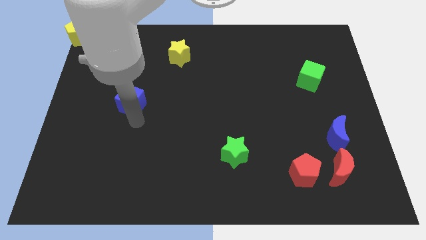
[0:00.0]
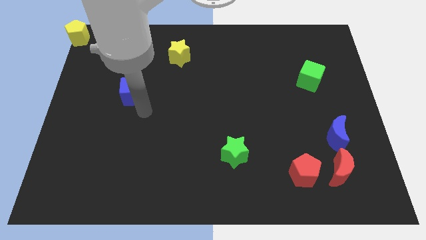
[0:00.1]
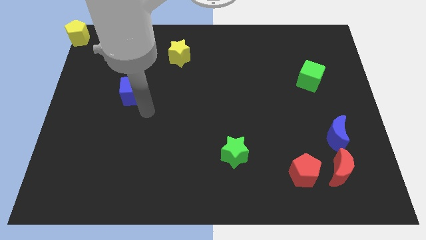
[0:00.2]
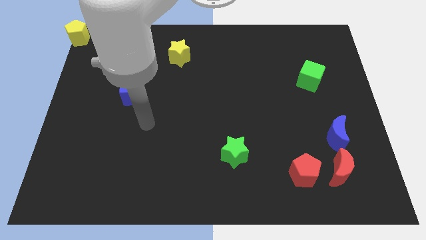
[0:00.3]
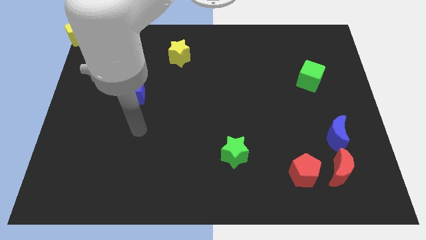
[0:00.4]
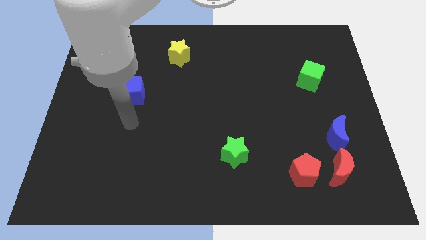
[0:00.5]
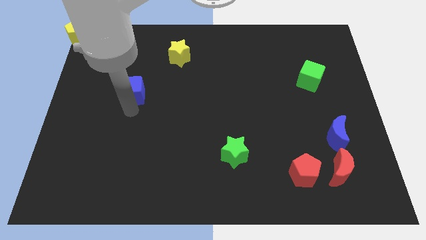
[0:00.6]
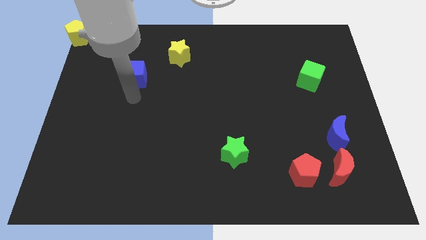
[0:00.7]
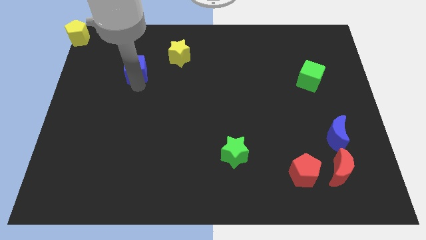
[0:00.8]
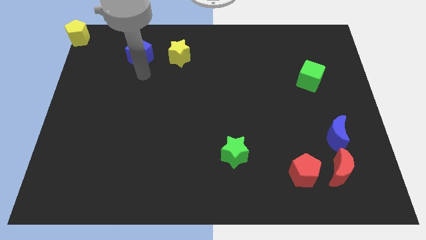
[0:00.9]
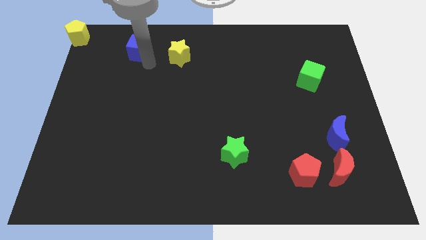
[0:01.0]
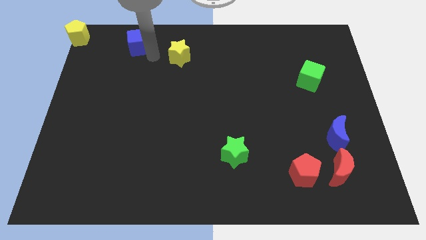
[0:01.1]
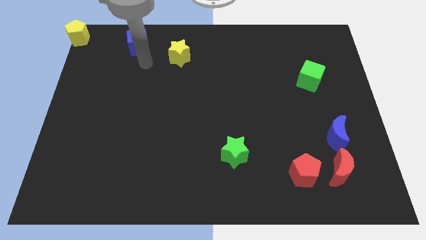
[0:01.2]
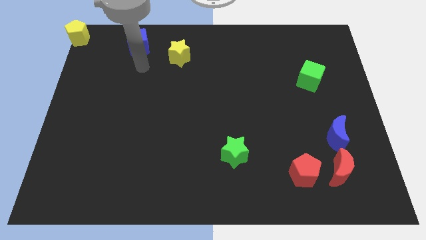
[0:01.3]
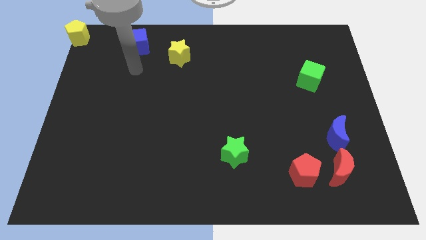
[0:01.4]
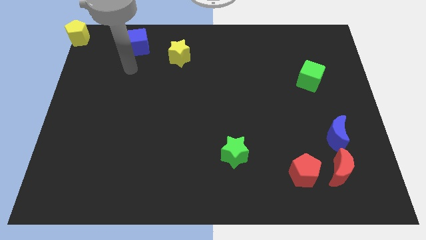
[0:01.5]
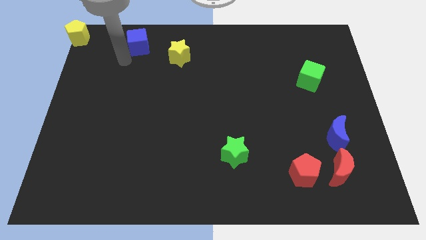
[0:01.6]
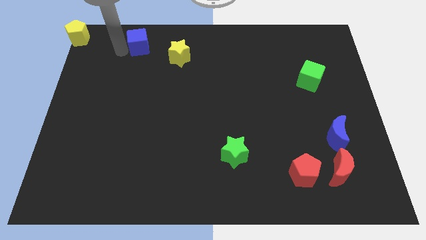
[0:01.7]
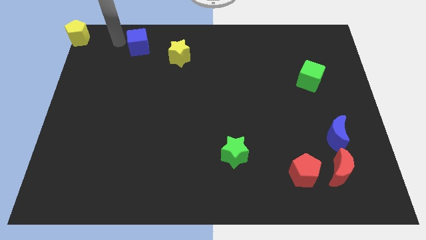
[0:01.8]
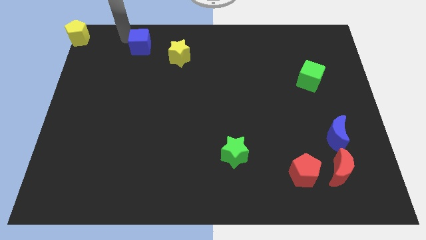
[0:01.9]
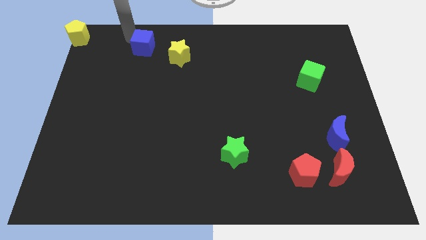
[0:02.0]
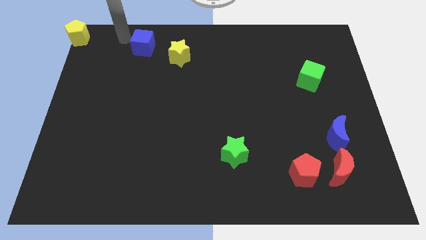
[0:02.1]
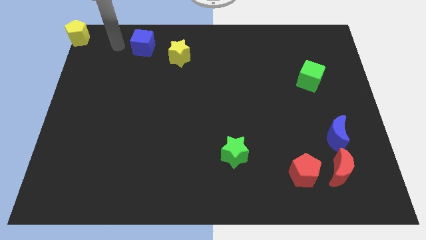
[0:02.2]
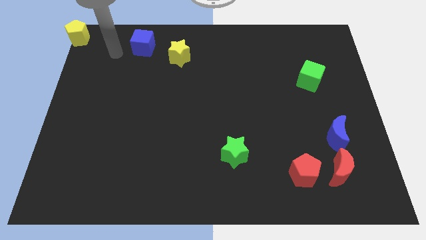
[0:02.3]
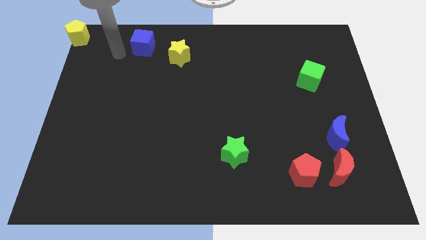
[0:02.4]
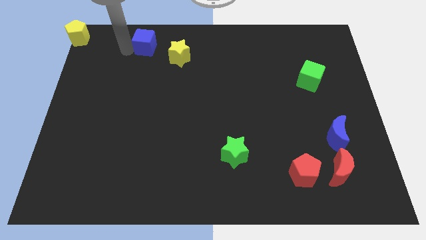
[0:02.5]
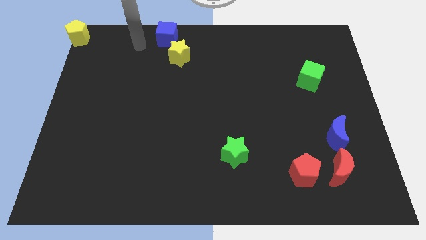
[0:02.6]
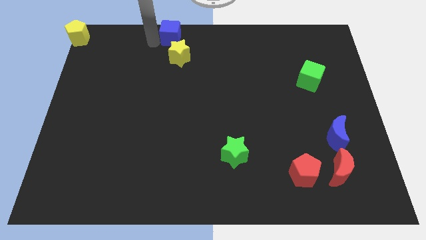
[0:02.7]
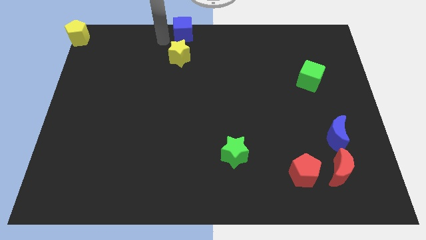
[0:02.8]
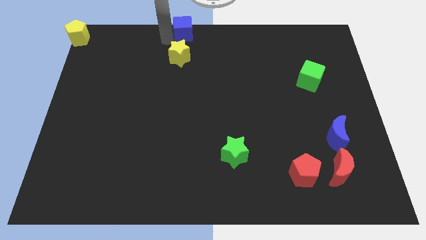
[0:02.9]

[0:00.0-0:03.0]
push blue cube above yellow star

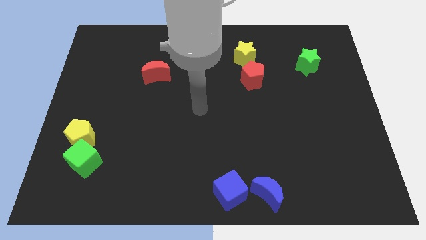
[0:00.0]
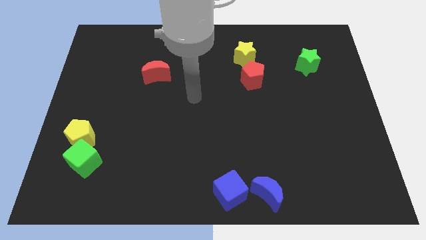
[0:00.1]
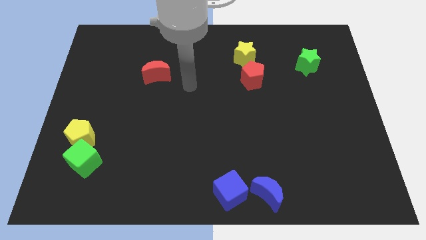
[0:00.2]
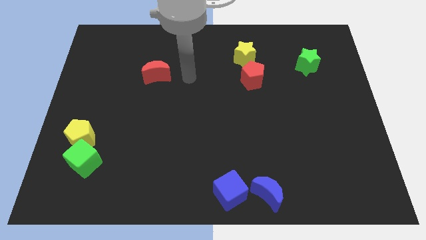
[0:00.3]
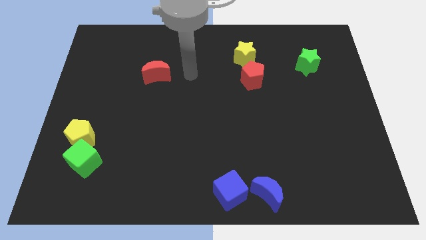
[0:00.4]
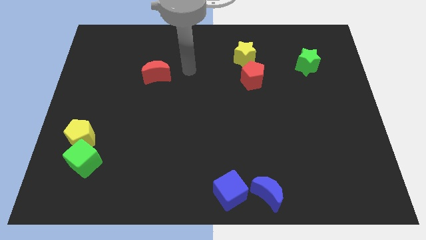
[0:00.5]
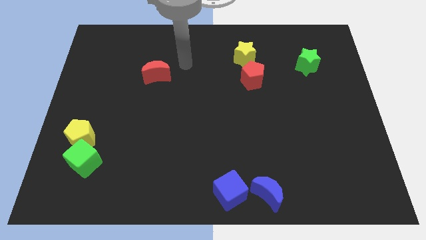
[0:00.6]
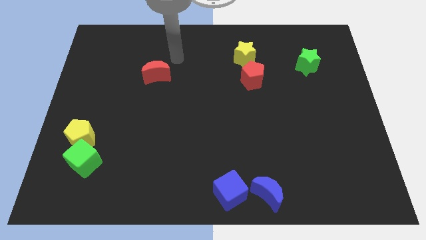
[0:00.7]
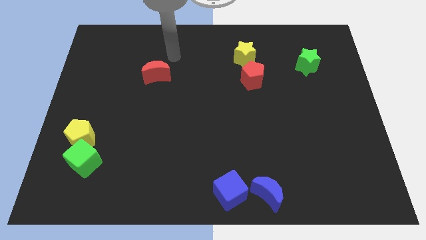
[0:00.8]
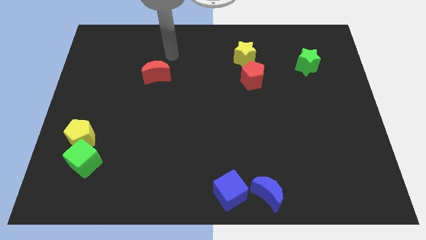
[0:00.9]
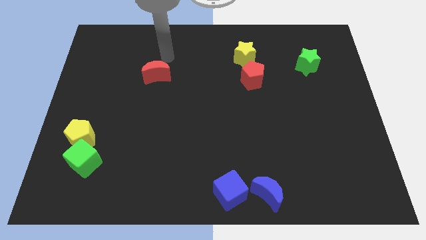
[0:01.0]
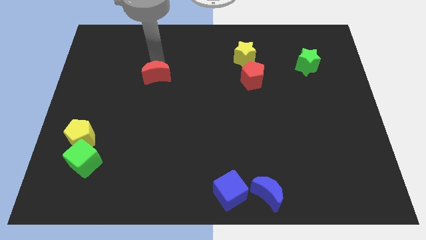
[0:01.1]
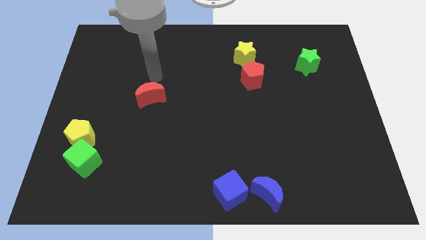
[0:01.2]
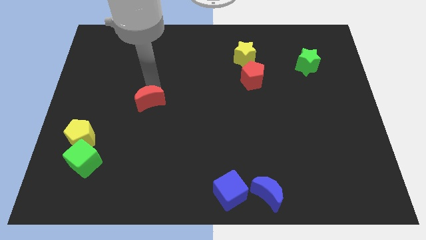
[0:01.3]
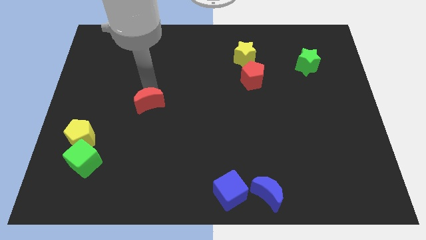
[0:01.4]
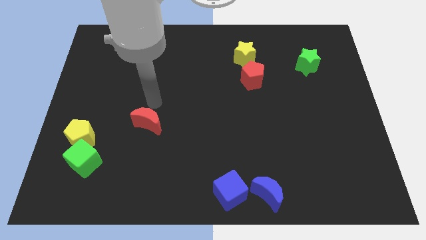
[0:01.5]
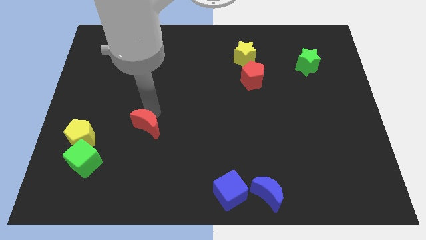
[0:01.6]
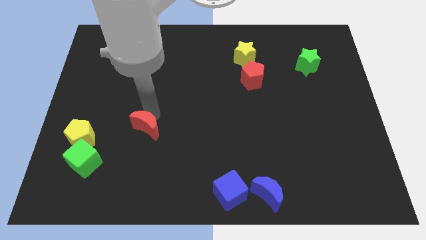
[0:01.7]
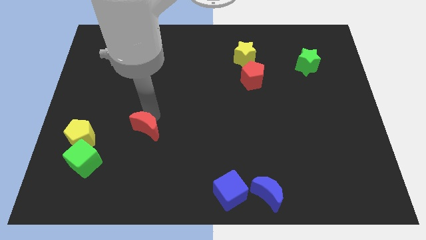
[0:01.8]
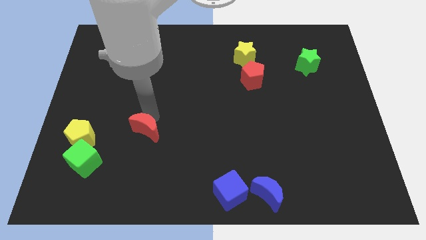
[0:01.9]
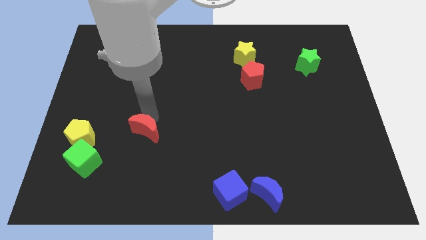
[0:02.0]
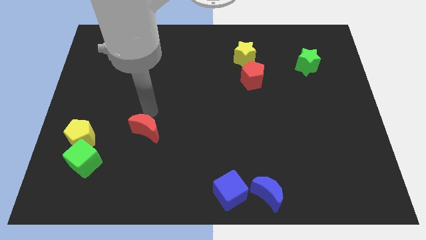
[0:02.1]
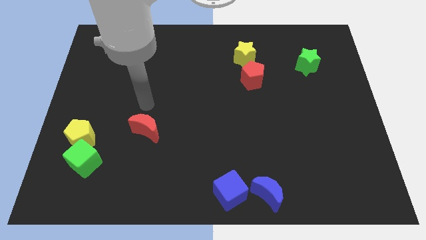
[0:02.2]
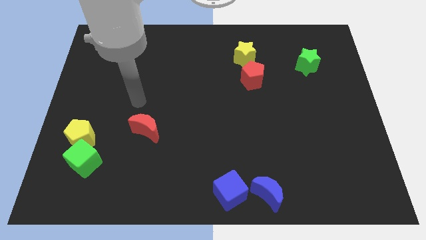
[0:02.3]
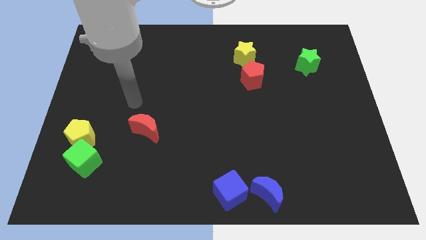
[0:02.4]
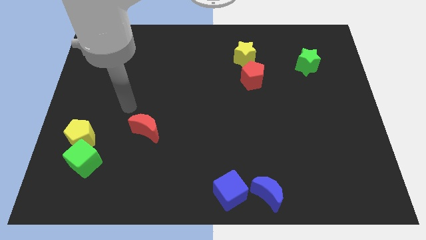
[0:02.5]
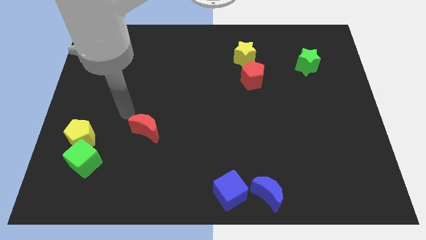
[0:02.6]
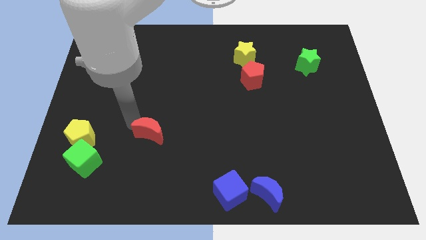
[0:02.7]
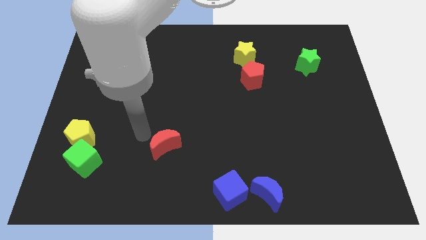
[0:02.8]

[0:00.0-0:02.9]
push the red crescent diagonally left to the blue cube

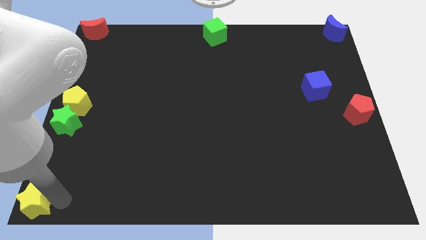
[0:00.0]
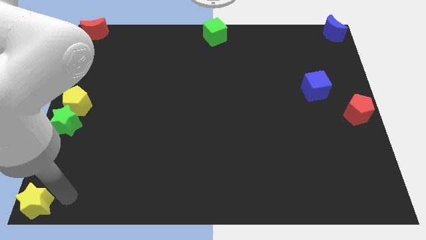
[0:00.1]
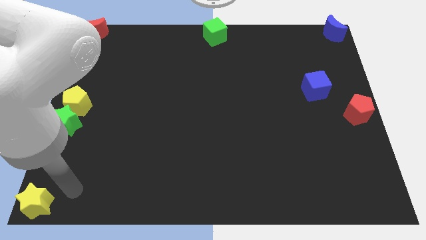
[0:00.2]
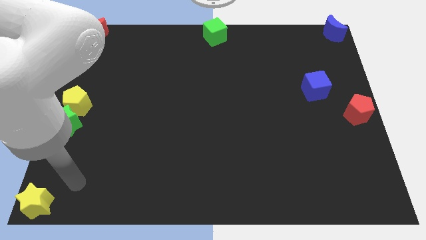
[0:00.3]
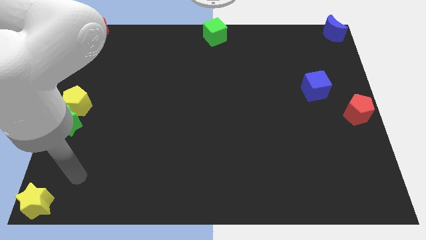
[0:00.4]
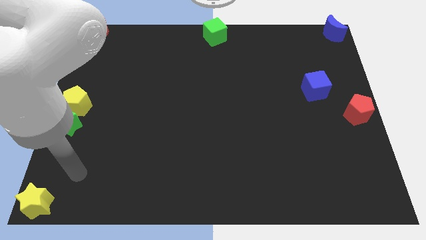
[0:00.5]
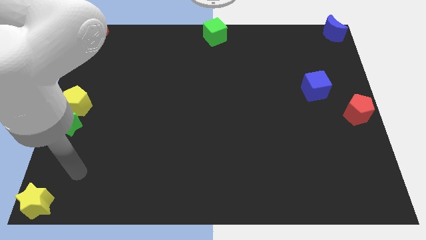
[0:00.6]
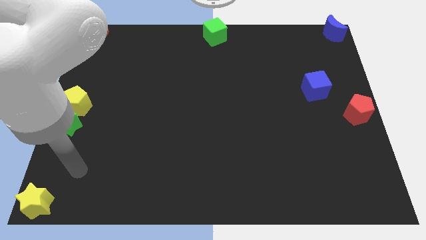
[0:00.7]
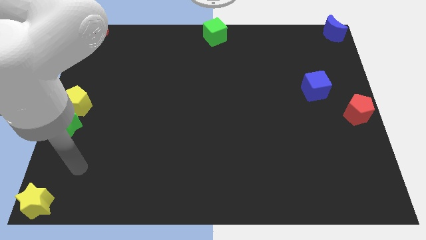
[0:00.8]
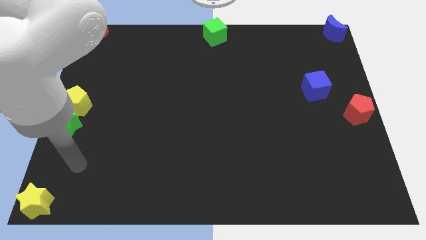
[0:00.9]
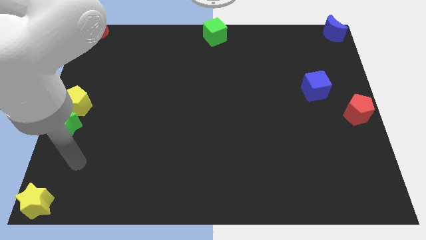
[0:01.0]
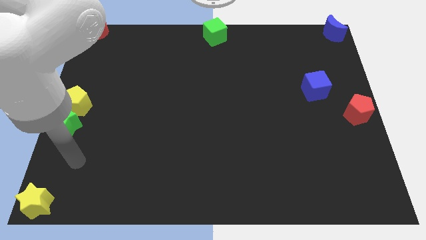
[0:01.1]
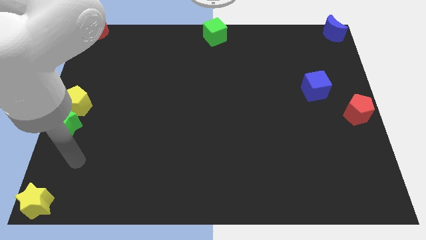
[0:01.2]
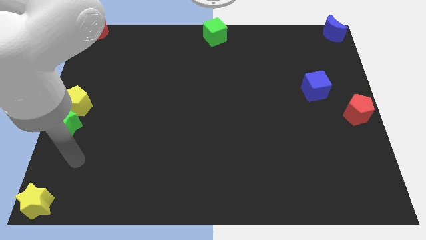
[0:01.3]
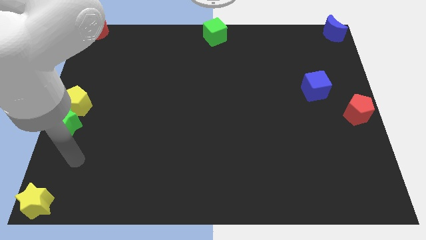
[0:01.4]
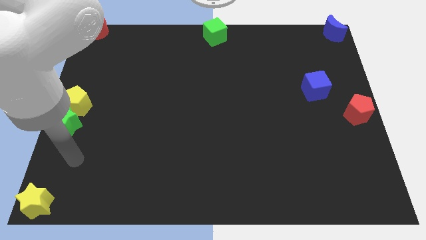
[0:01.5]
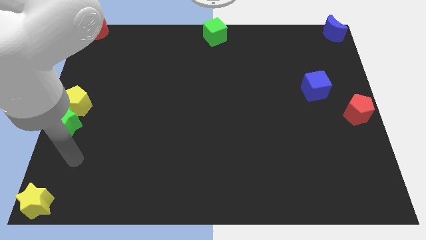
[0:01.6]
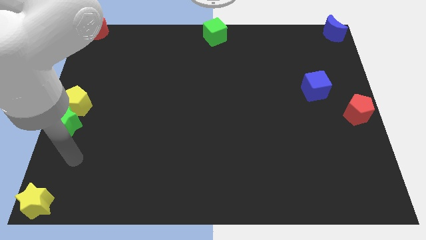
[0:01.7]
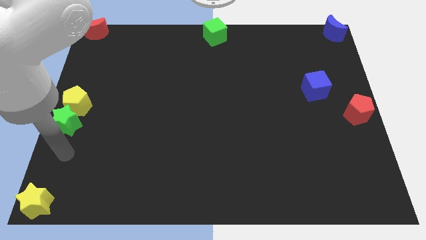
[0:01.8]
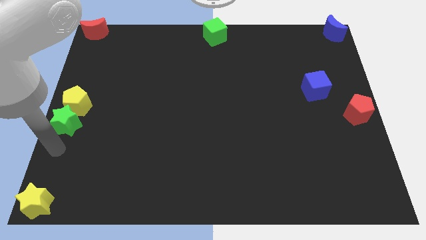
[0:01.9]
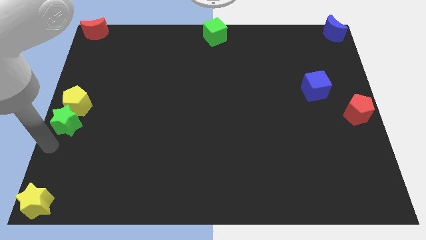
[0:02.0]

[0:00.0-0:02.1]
point your arm in between the stars

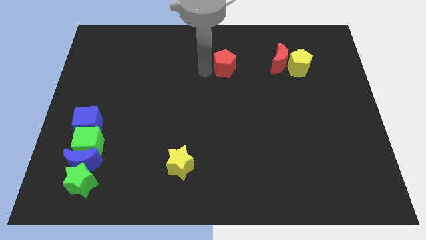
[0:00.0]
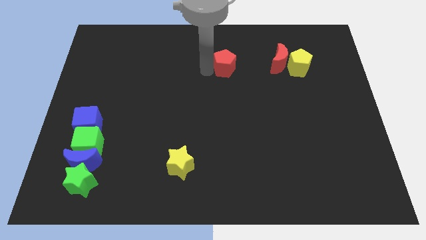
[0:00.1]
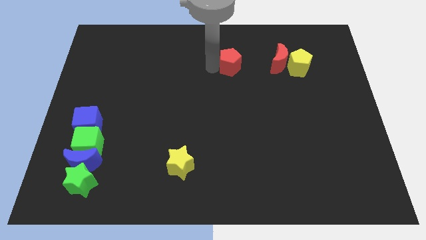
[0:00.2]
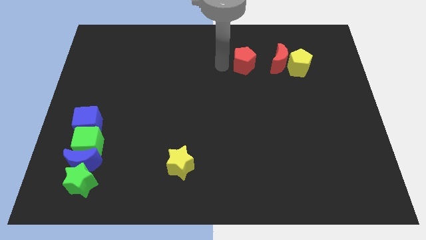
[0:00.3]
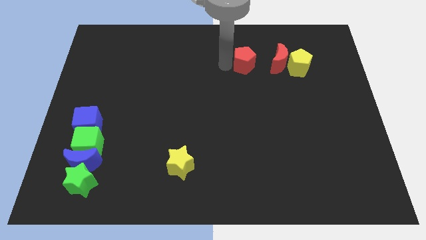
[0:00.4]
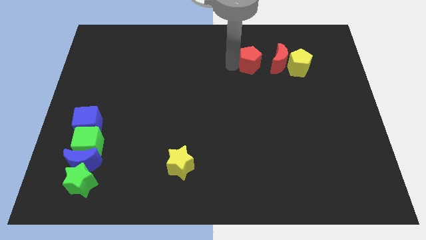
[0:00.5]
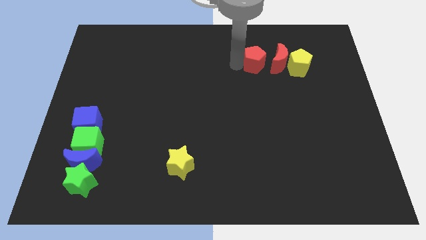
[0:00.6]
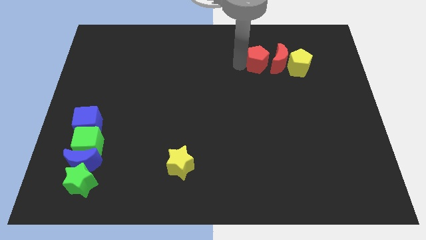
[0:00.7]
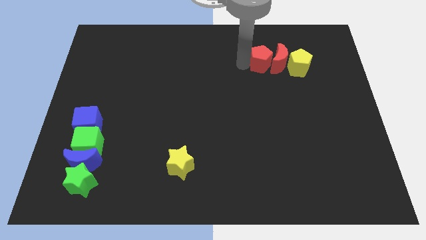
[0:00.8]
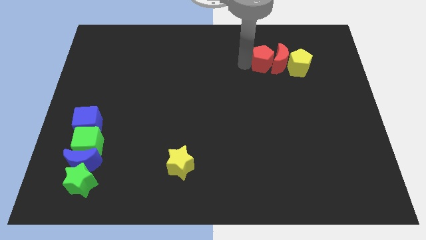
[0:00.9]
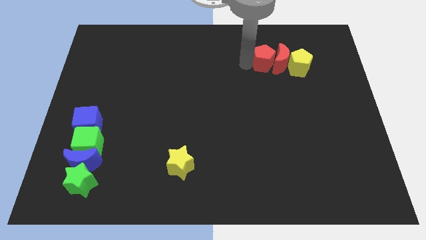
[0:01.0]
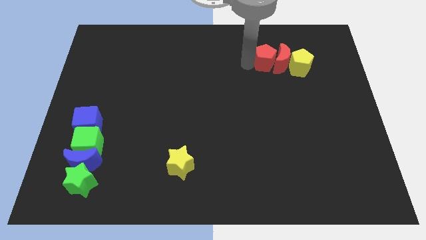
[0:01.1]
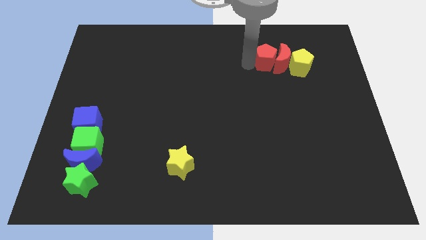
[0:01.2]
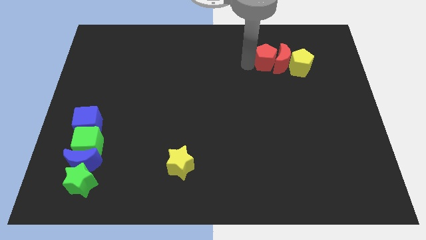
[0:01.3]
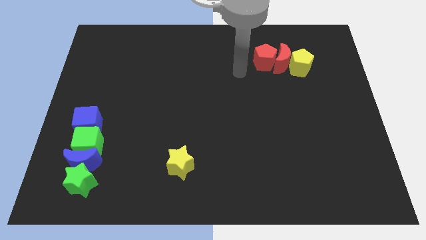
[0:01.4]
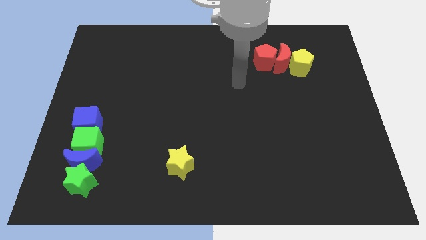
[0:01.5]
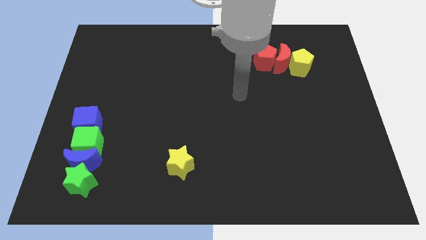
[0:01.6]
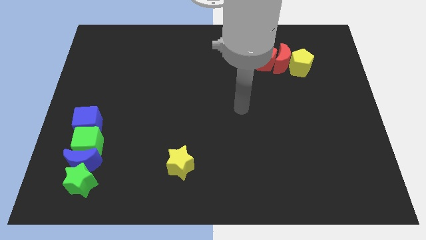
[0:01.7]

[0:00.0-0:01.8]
move the red pentagon into the red moon
